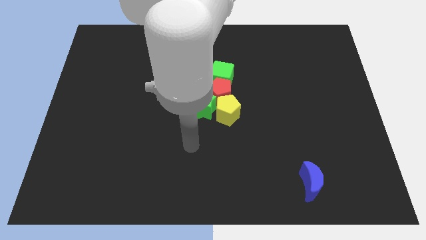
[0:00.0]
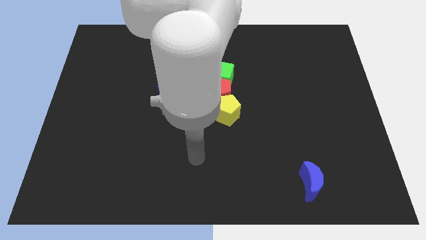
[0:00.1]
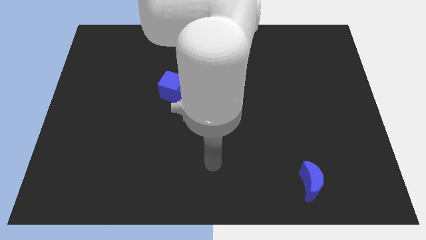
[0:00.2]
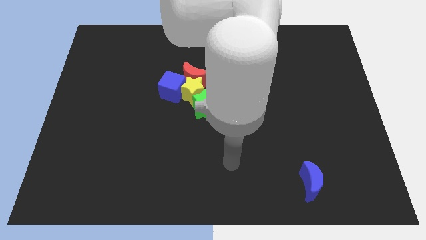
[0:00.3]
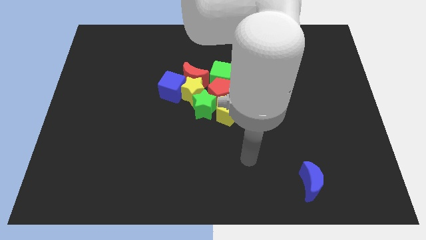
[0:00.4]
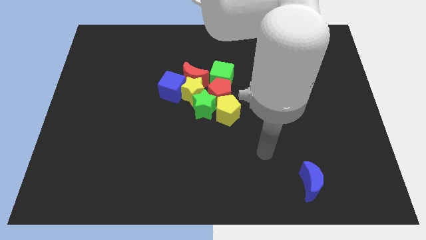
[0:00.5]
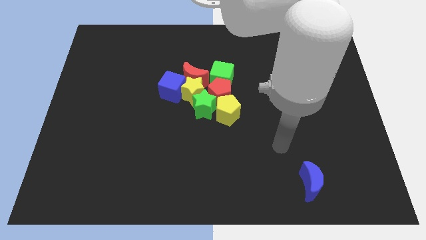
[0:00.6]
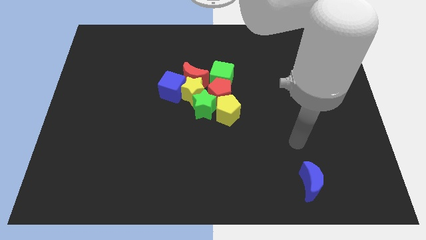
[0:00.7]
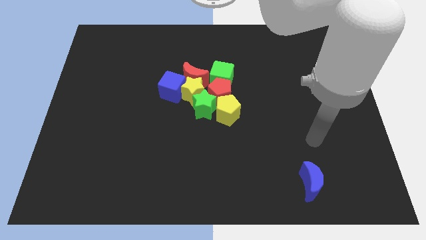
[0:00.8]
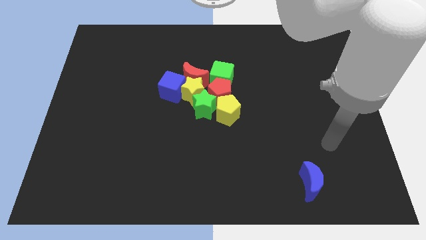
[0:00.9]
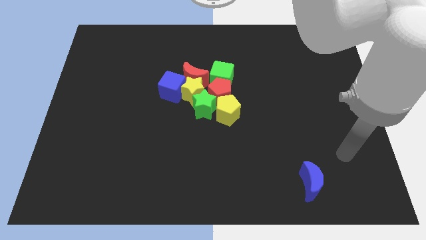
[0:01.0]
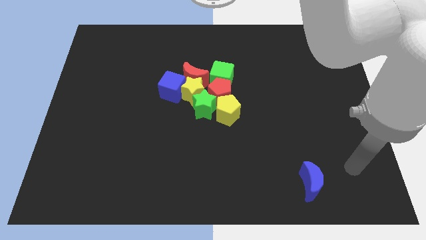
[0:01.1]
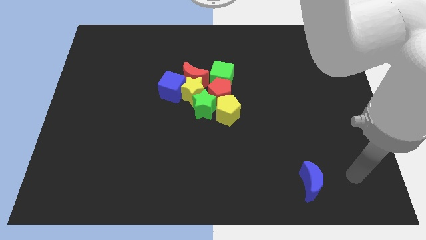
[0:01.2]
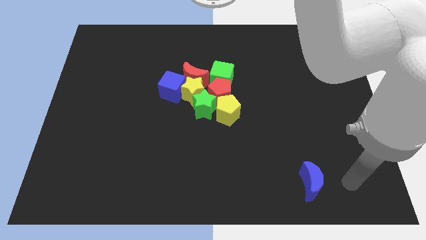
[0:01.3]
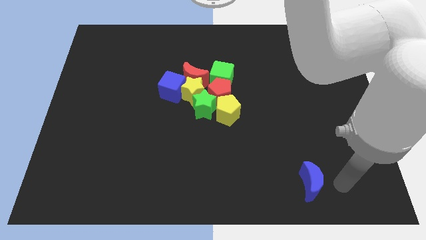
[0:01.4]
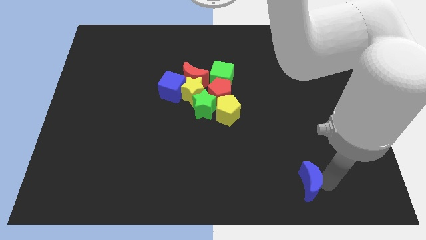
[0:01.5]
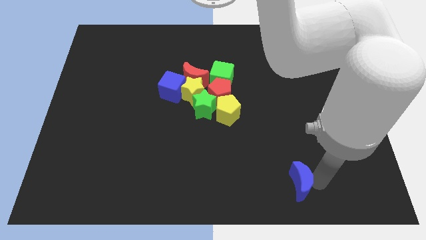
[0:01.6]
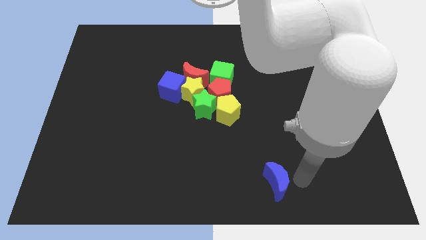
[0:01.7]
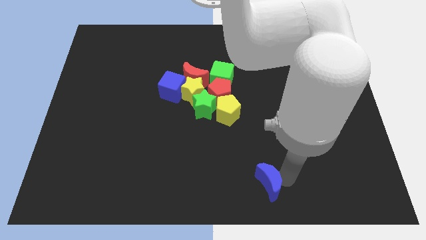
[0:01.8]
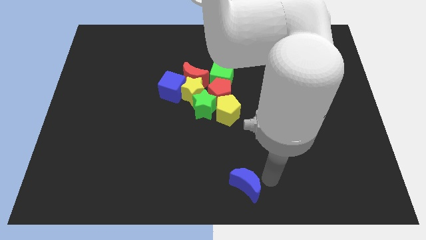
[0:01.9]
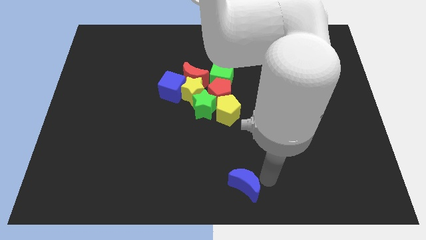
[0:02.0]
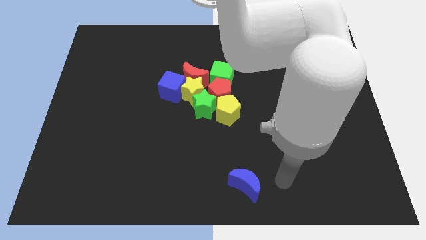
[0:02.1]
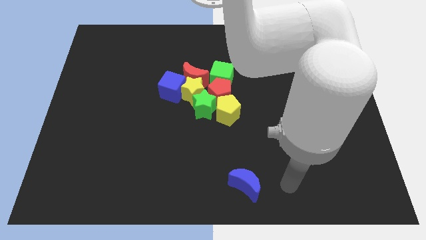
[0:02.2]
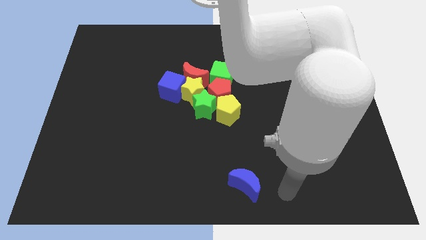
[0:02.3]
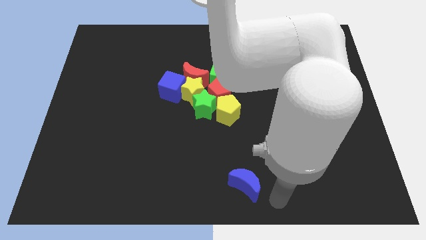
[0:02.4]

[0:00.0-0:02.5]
move the blue moon to the bottom middle of the board

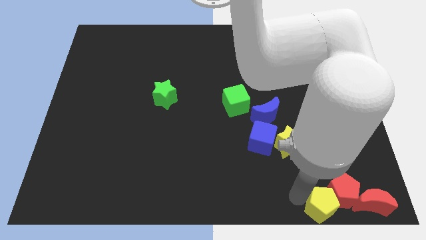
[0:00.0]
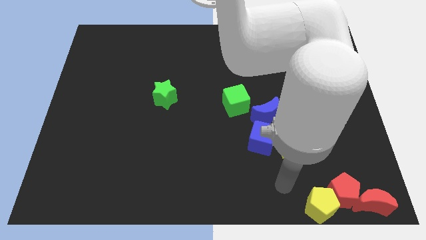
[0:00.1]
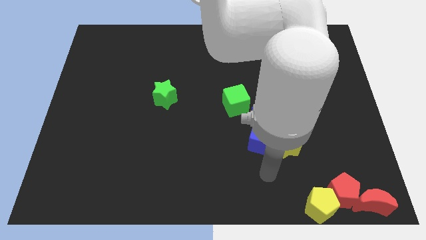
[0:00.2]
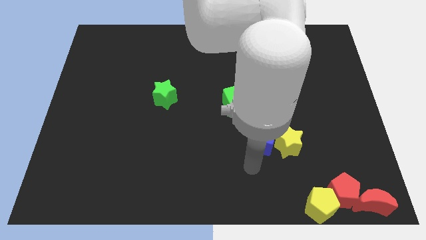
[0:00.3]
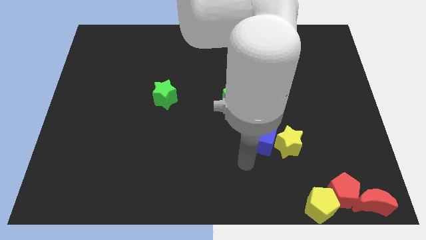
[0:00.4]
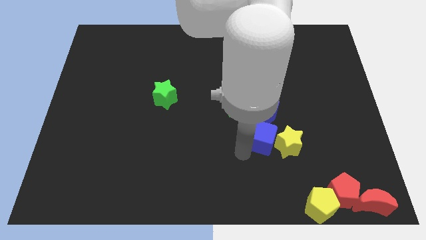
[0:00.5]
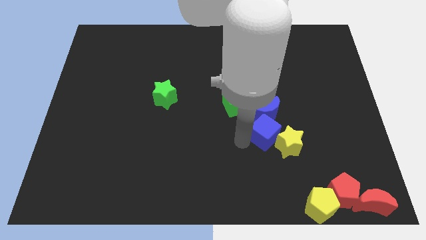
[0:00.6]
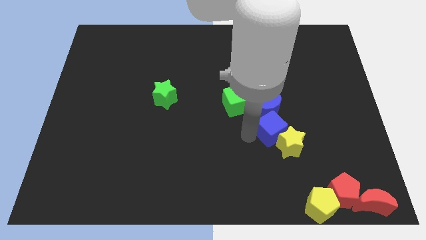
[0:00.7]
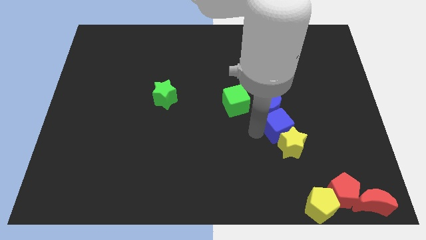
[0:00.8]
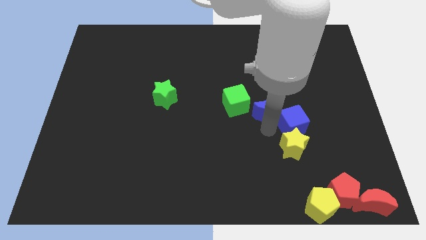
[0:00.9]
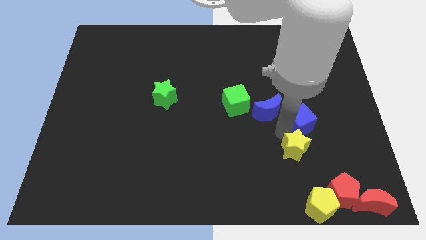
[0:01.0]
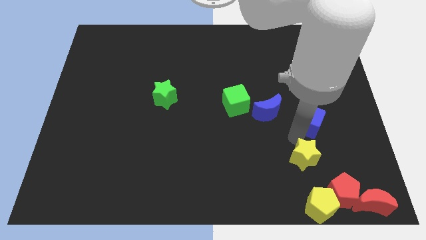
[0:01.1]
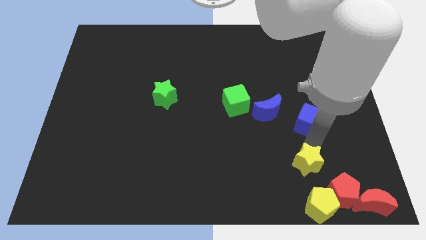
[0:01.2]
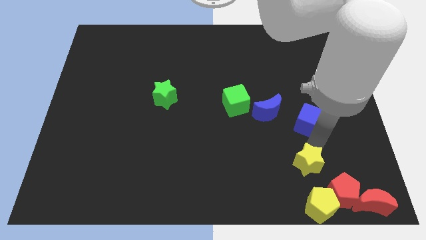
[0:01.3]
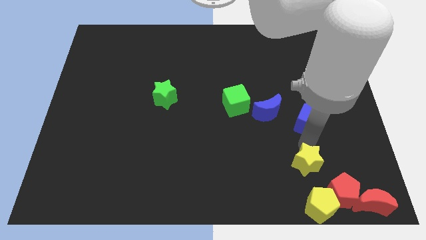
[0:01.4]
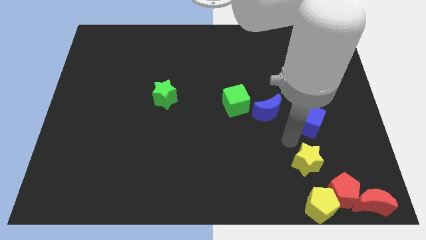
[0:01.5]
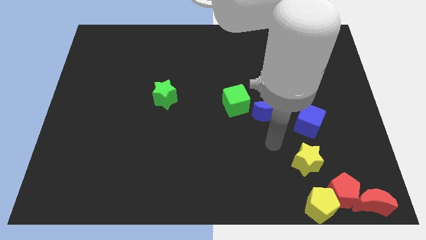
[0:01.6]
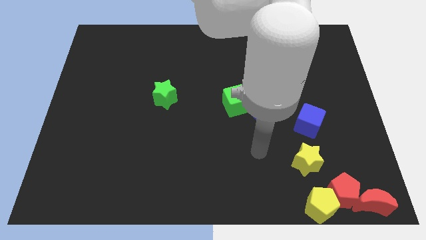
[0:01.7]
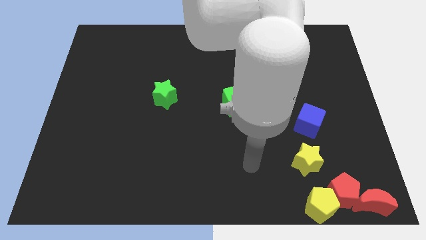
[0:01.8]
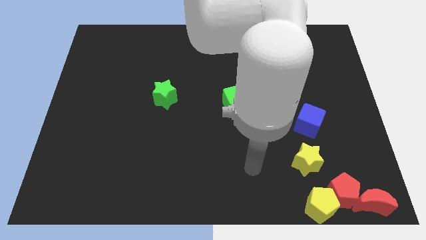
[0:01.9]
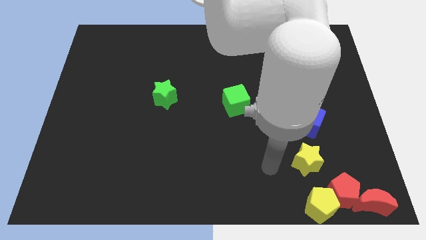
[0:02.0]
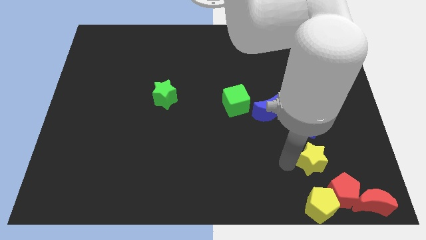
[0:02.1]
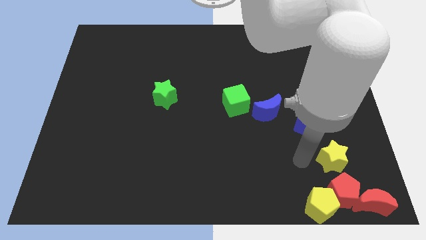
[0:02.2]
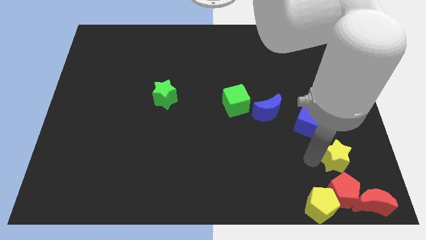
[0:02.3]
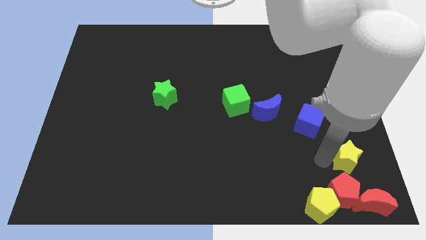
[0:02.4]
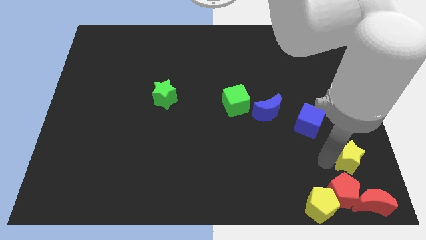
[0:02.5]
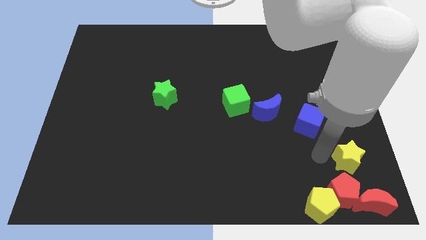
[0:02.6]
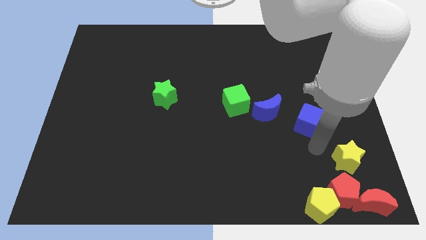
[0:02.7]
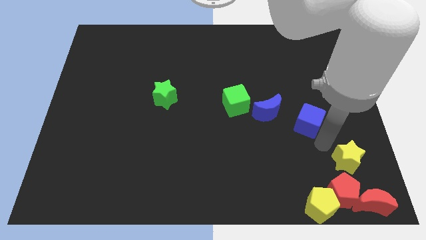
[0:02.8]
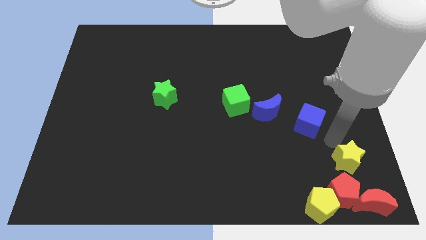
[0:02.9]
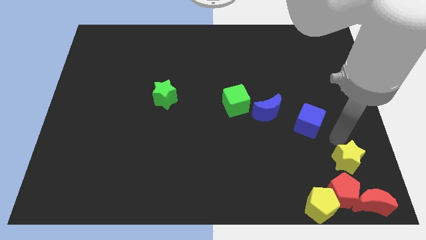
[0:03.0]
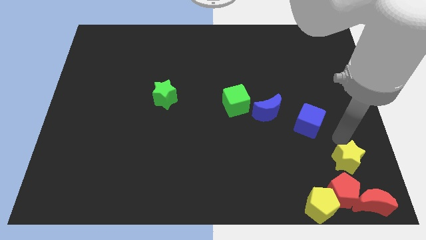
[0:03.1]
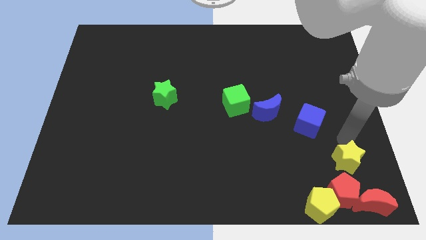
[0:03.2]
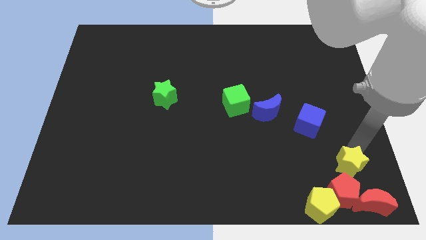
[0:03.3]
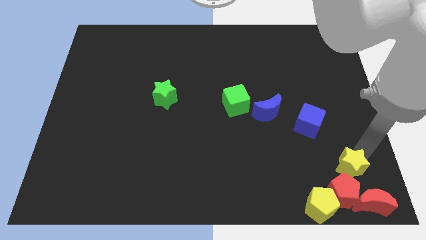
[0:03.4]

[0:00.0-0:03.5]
move the yellow star and the blue moon away from the blue cube

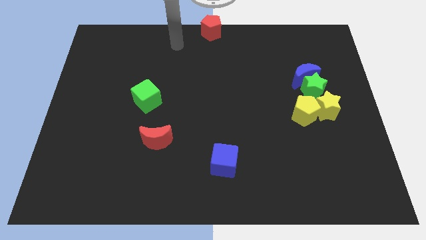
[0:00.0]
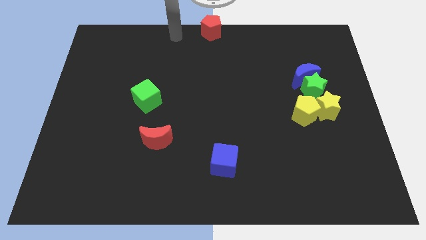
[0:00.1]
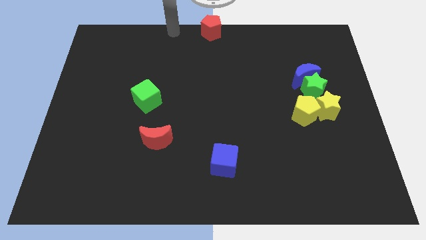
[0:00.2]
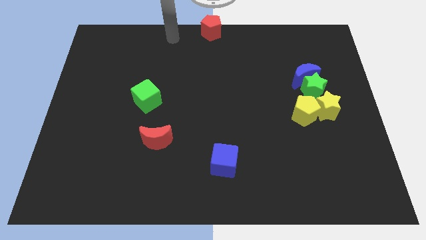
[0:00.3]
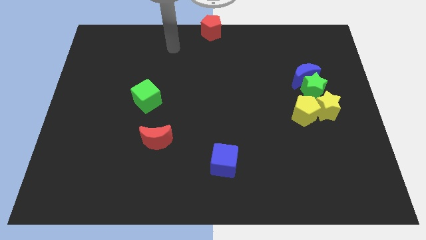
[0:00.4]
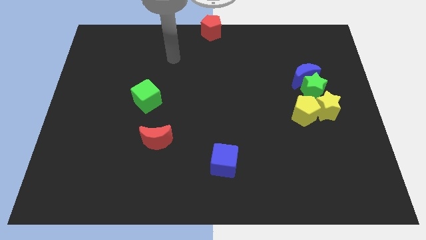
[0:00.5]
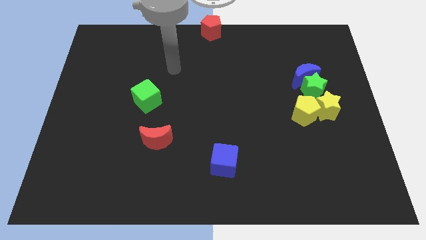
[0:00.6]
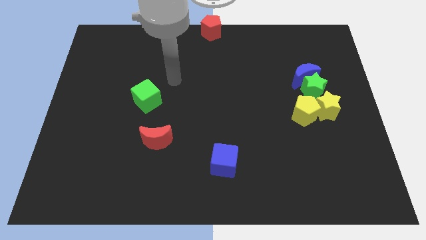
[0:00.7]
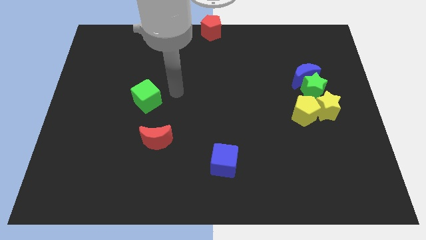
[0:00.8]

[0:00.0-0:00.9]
move the arm away from the red pentagon

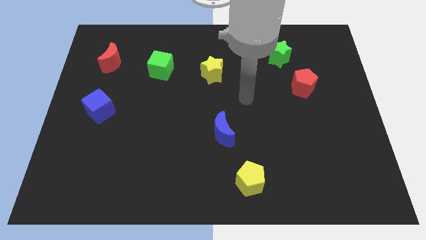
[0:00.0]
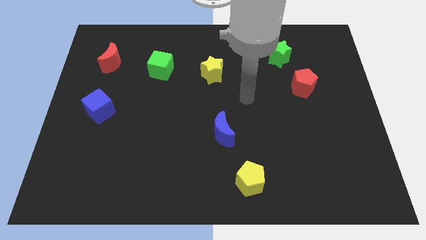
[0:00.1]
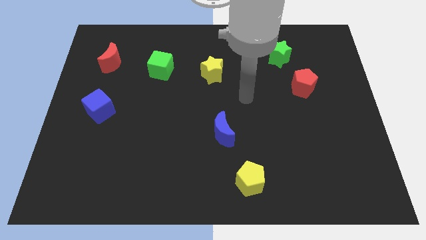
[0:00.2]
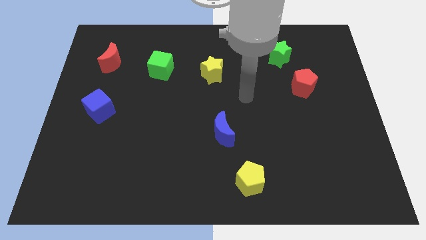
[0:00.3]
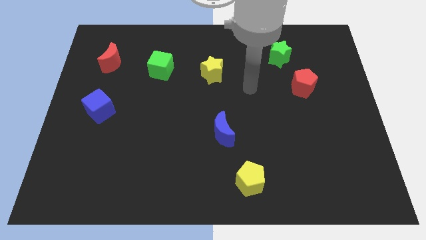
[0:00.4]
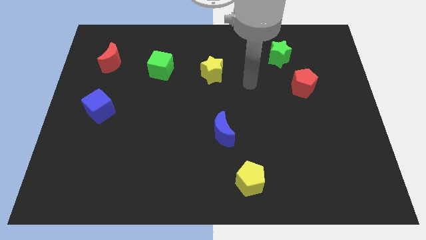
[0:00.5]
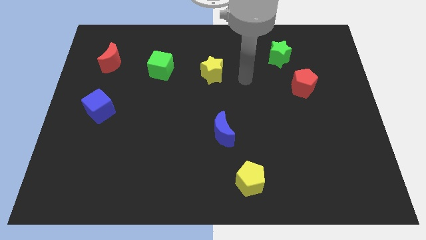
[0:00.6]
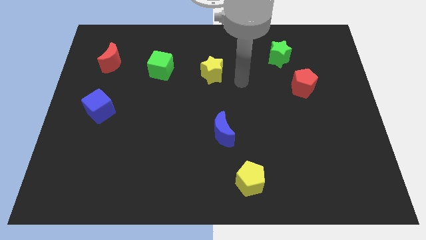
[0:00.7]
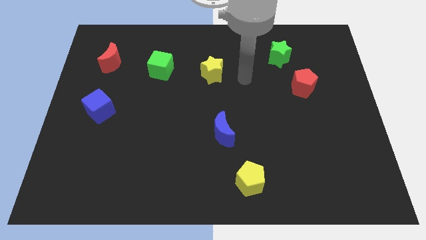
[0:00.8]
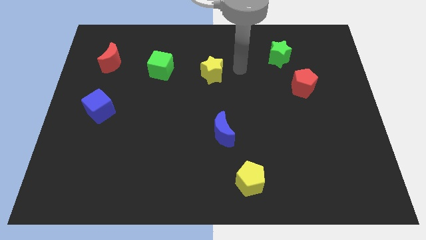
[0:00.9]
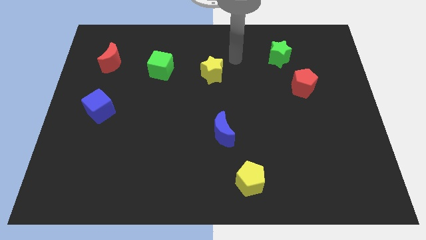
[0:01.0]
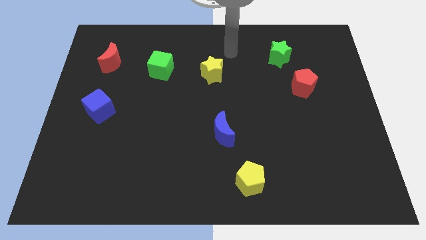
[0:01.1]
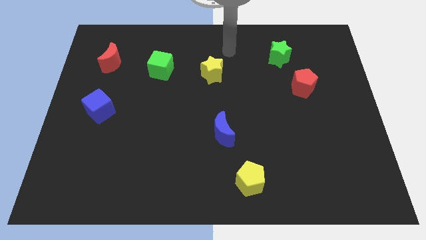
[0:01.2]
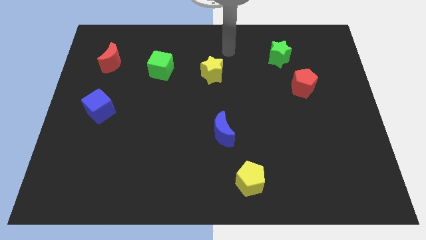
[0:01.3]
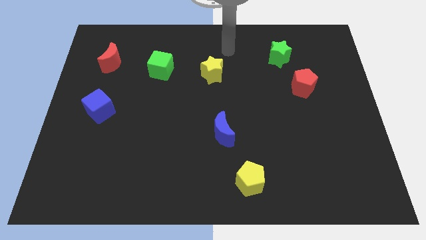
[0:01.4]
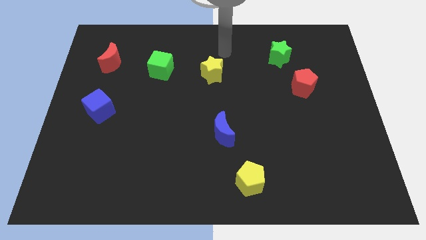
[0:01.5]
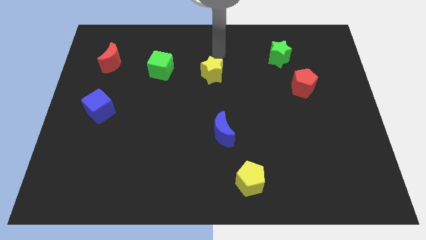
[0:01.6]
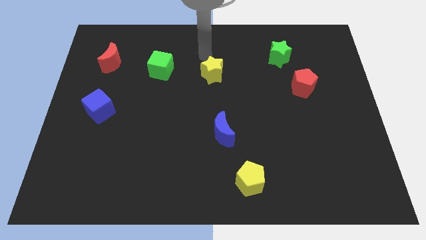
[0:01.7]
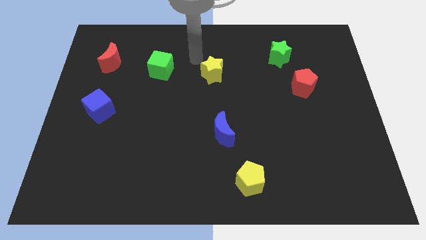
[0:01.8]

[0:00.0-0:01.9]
move your arm towards the yellow star

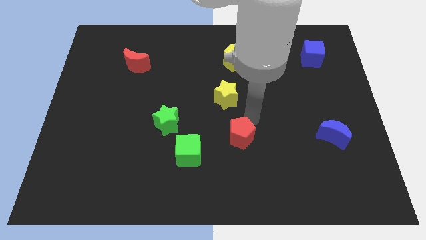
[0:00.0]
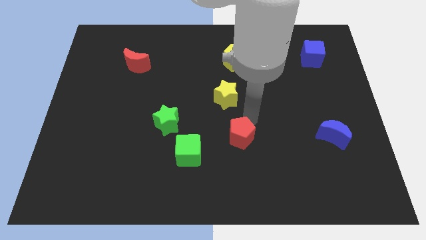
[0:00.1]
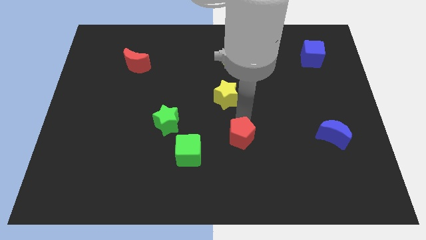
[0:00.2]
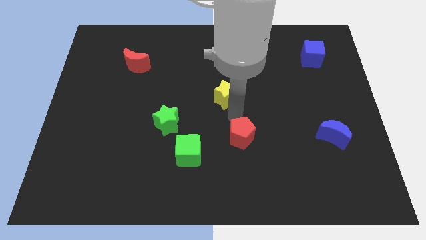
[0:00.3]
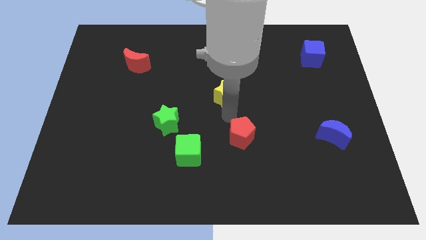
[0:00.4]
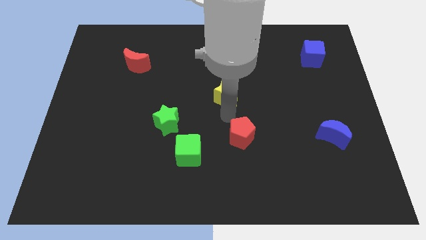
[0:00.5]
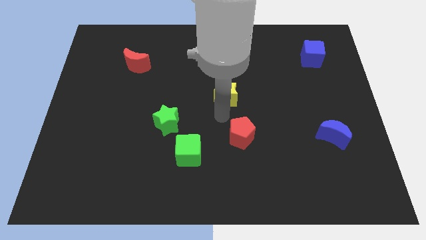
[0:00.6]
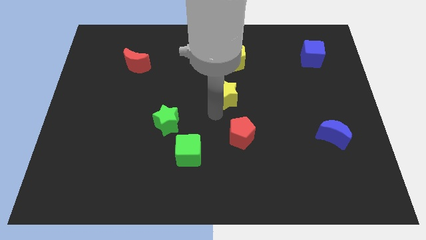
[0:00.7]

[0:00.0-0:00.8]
place arm at the bottom of yellow star
